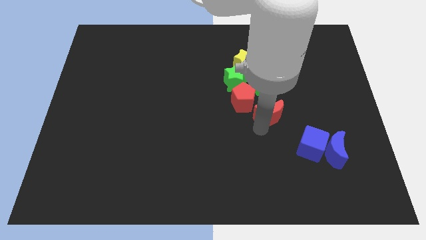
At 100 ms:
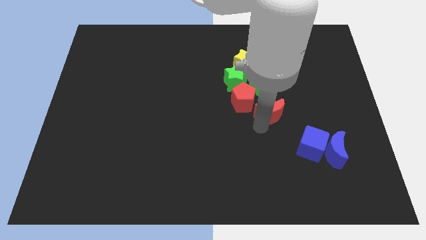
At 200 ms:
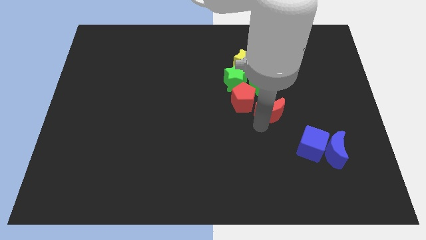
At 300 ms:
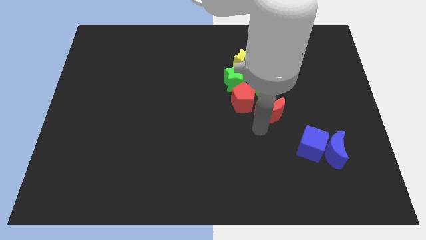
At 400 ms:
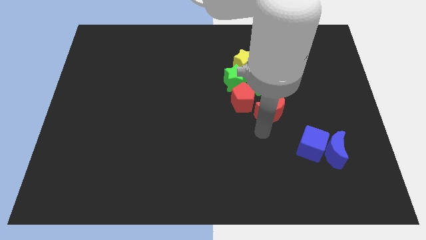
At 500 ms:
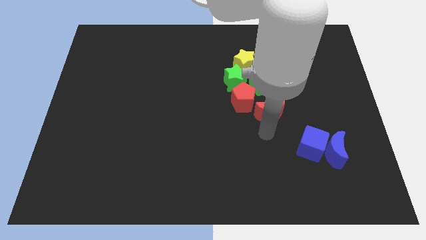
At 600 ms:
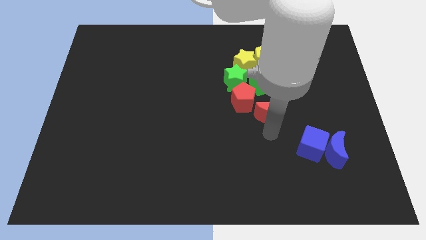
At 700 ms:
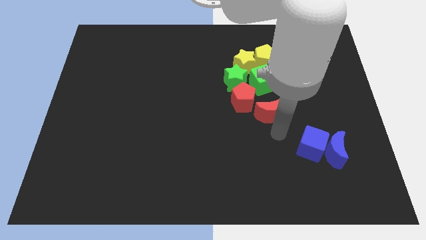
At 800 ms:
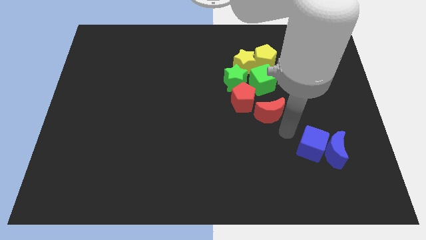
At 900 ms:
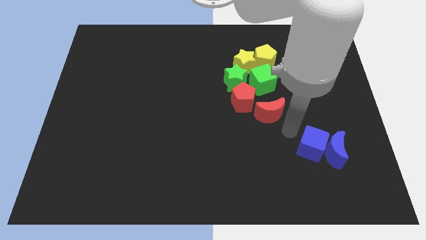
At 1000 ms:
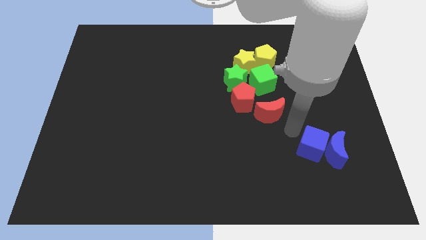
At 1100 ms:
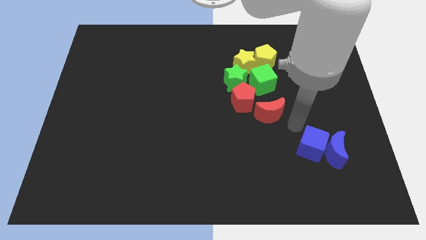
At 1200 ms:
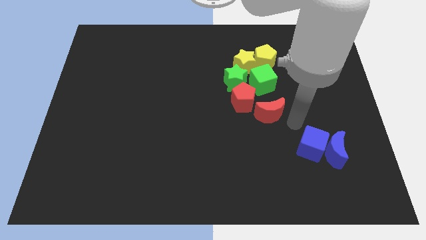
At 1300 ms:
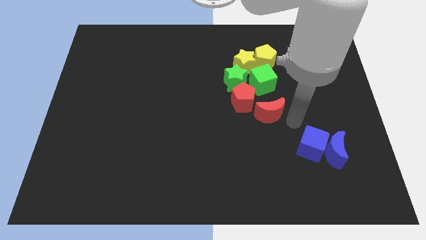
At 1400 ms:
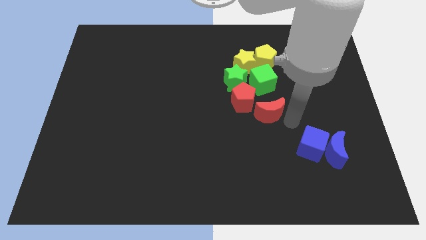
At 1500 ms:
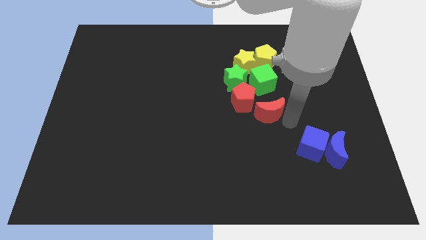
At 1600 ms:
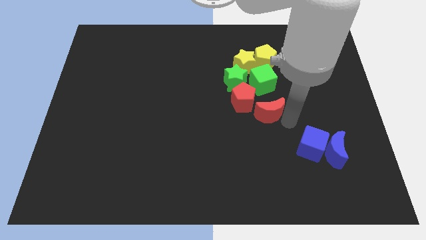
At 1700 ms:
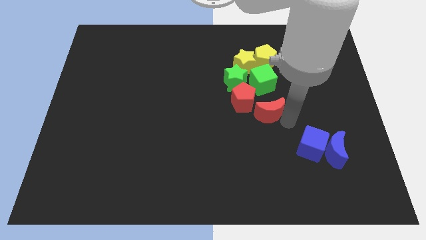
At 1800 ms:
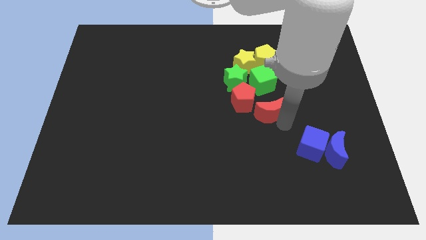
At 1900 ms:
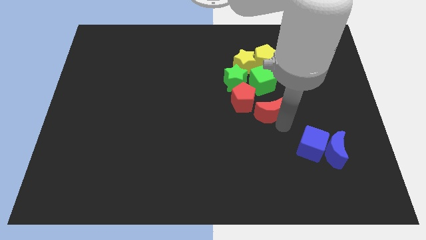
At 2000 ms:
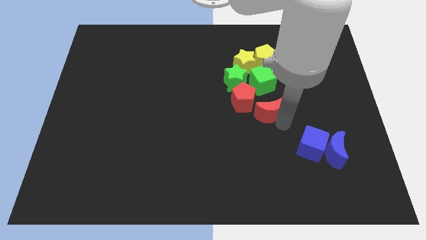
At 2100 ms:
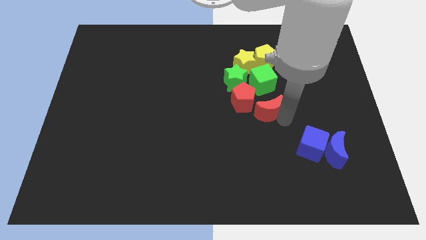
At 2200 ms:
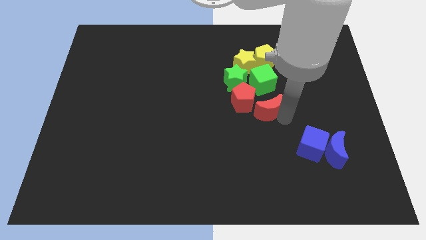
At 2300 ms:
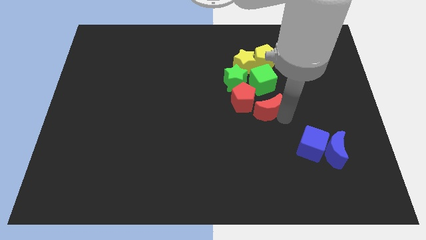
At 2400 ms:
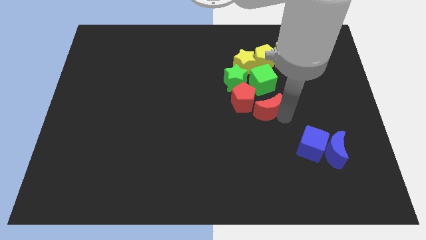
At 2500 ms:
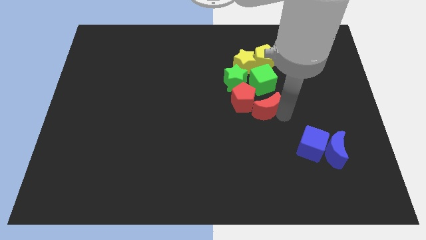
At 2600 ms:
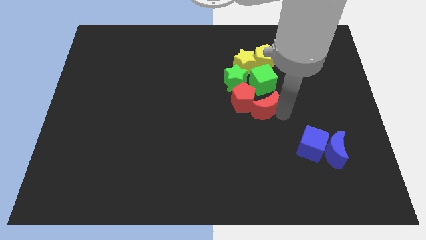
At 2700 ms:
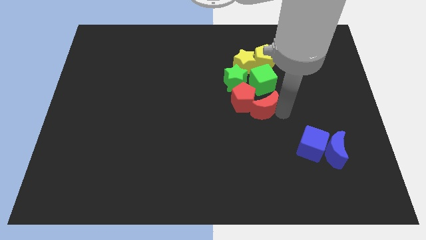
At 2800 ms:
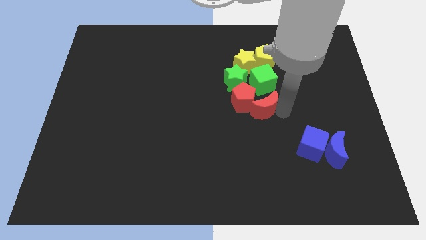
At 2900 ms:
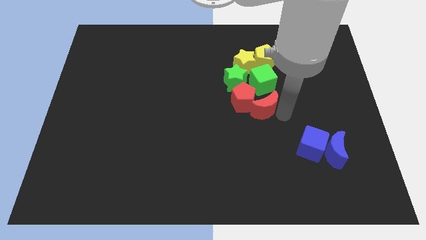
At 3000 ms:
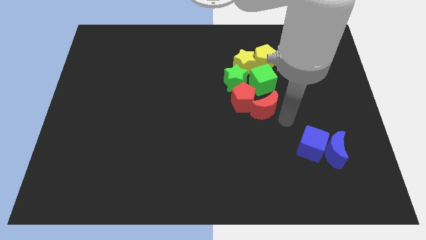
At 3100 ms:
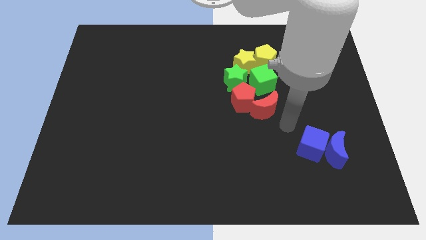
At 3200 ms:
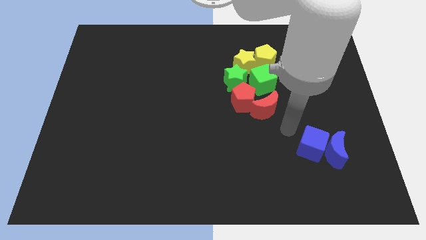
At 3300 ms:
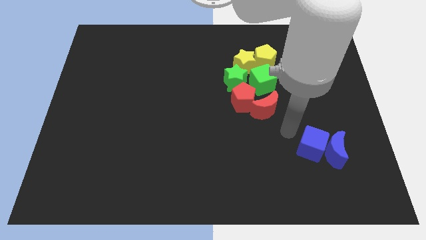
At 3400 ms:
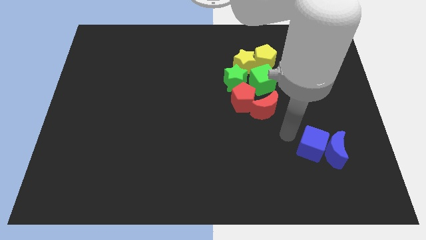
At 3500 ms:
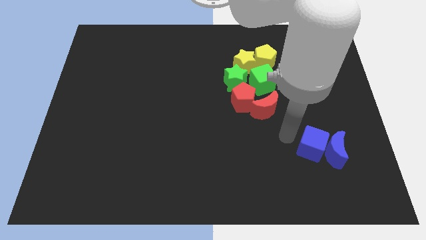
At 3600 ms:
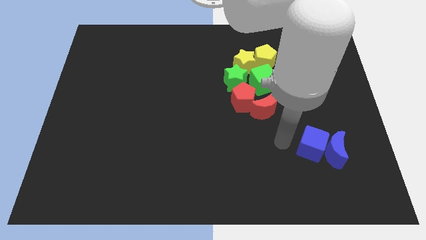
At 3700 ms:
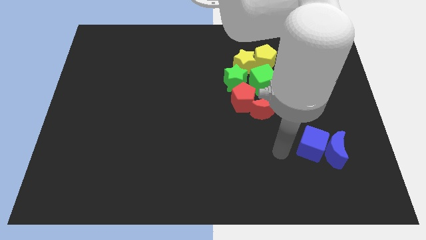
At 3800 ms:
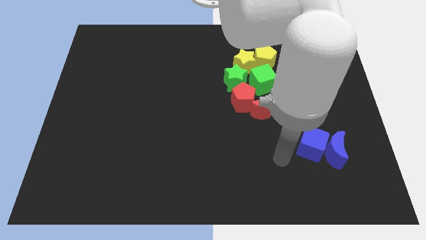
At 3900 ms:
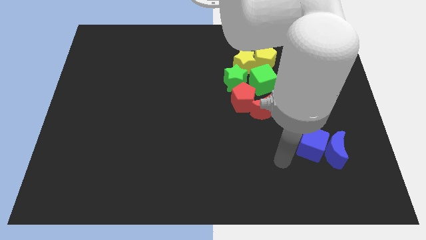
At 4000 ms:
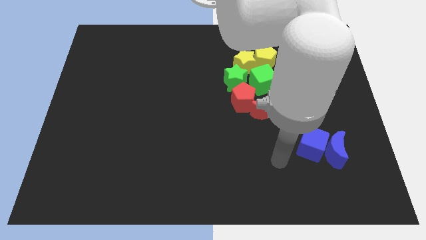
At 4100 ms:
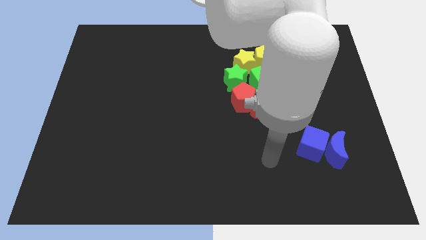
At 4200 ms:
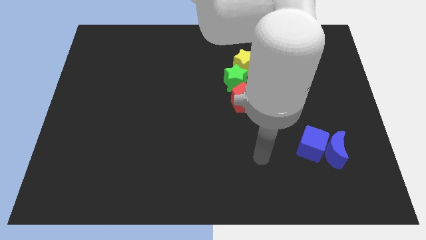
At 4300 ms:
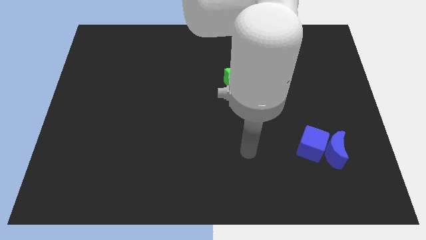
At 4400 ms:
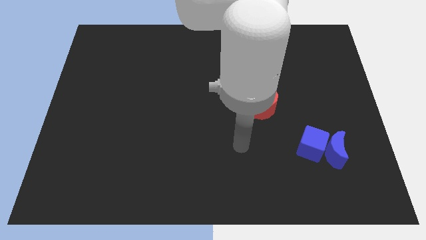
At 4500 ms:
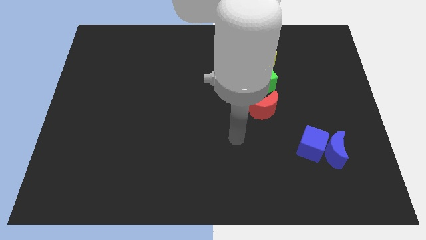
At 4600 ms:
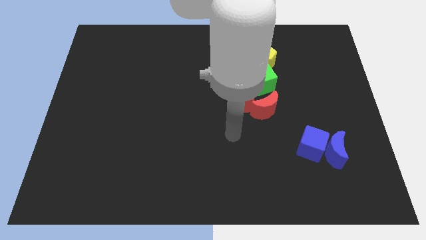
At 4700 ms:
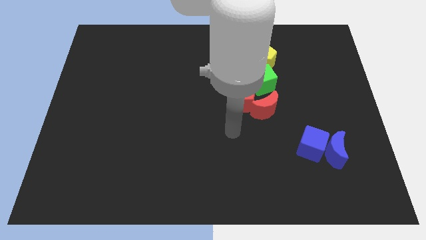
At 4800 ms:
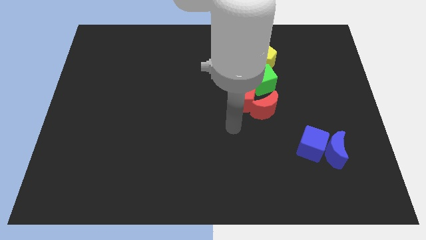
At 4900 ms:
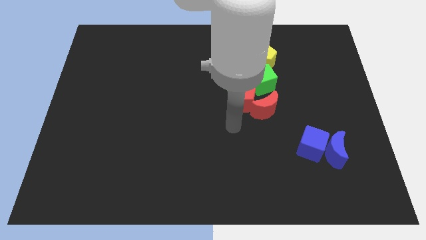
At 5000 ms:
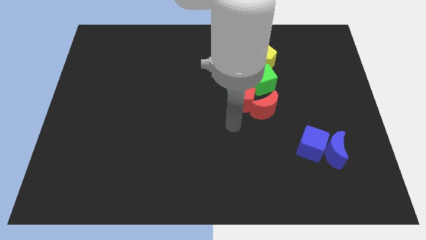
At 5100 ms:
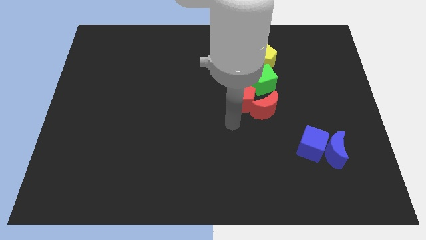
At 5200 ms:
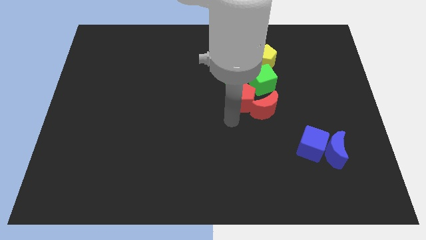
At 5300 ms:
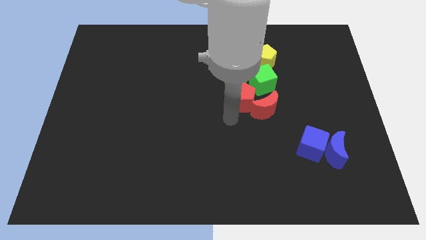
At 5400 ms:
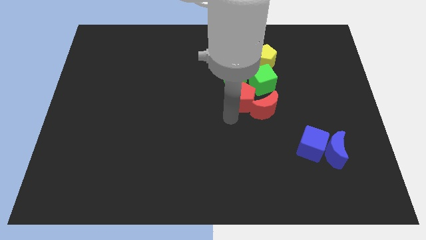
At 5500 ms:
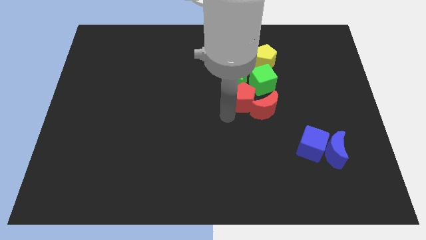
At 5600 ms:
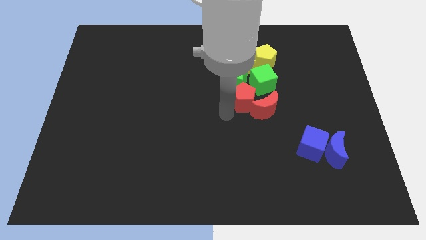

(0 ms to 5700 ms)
place red crescent right bottom of the red pentagon

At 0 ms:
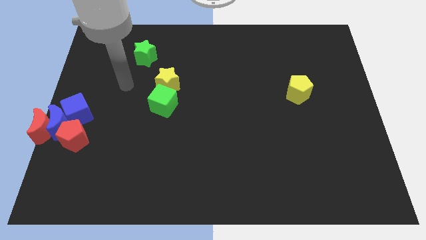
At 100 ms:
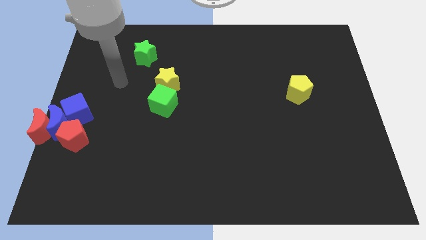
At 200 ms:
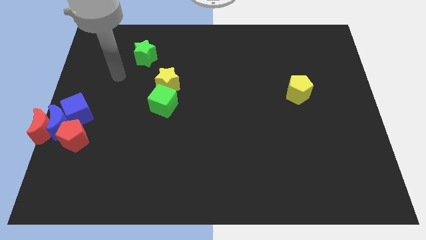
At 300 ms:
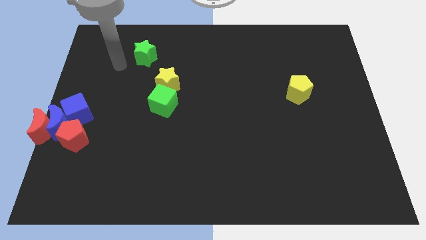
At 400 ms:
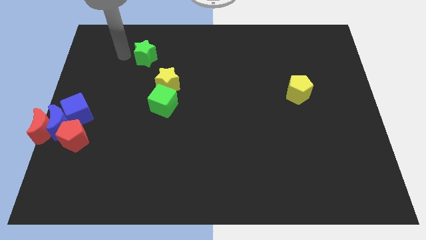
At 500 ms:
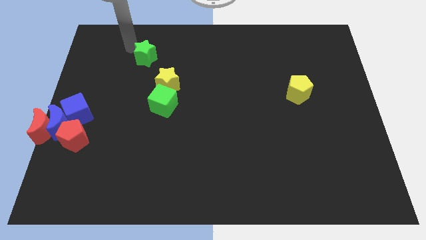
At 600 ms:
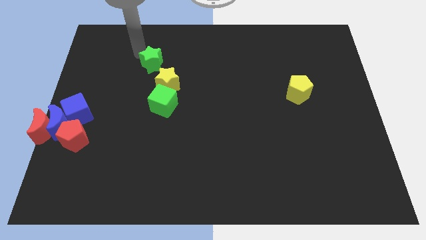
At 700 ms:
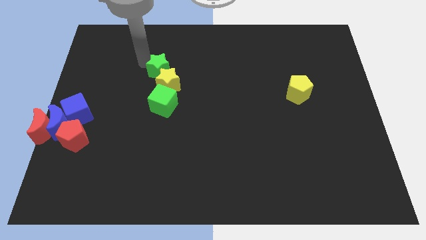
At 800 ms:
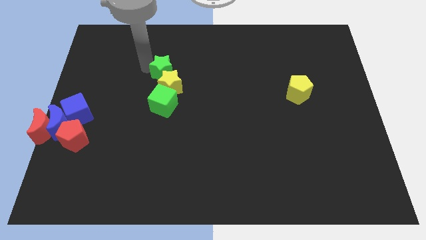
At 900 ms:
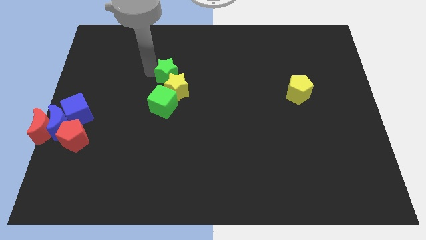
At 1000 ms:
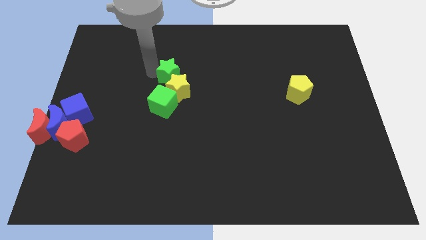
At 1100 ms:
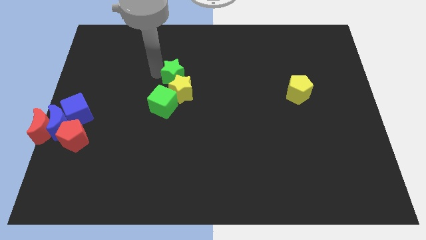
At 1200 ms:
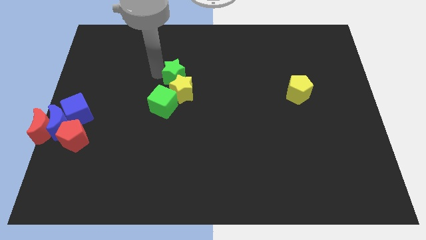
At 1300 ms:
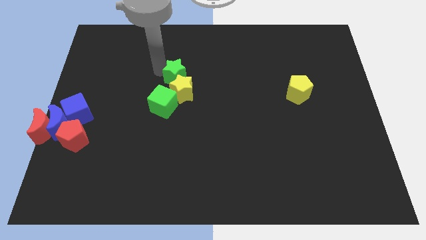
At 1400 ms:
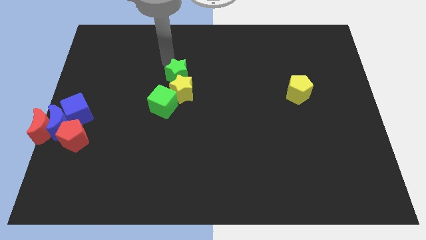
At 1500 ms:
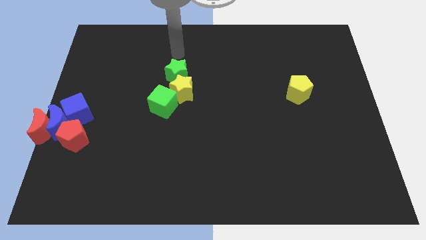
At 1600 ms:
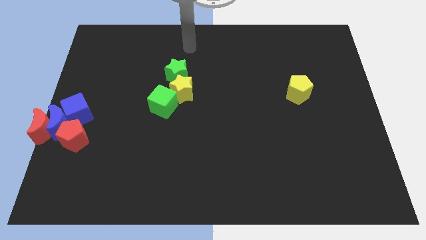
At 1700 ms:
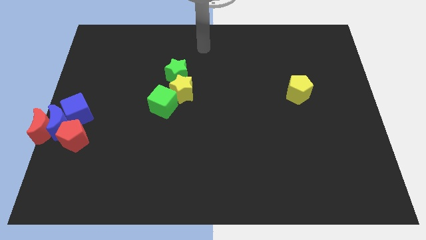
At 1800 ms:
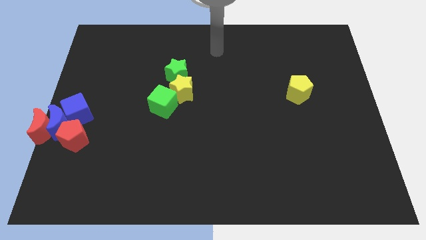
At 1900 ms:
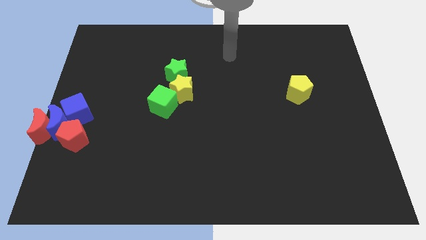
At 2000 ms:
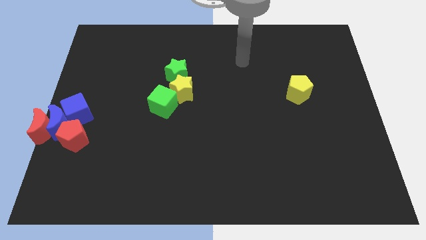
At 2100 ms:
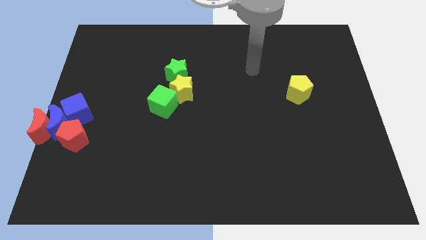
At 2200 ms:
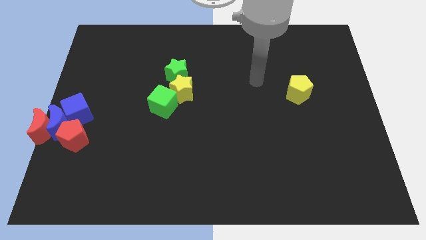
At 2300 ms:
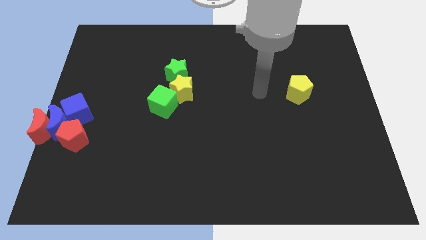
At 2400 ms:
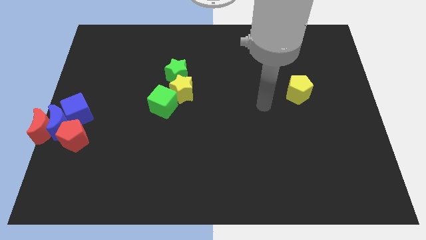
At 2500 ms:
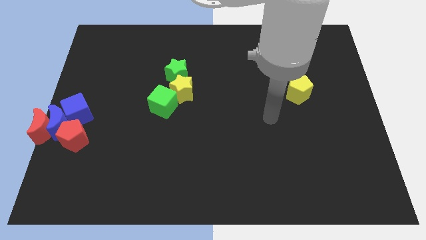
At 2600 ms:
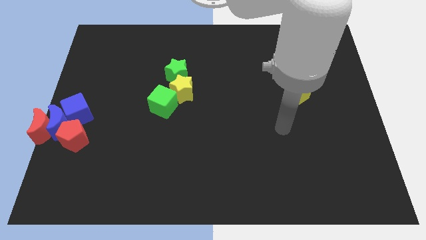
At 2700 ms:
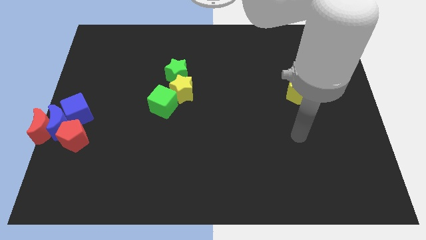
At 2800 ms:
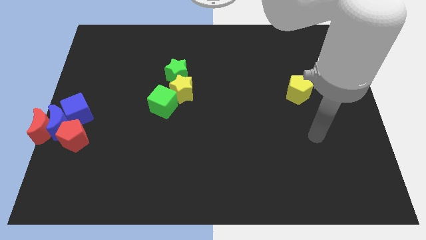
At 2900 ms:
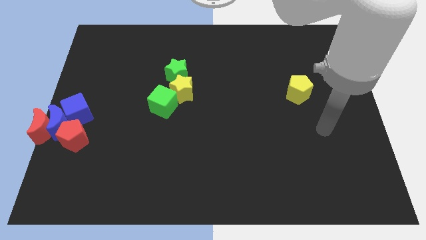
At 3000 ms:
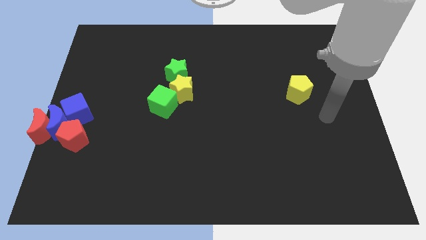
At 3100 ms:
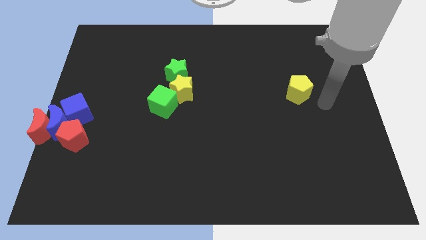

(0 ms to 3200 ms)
push the yellow star with green star slightly to the bottom of the board

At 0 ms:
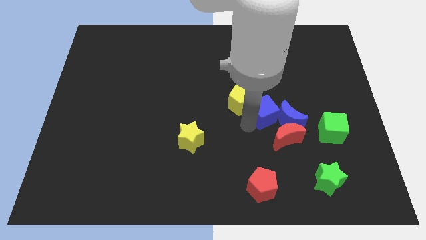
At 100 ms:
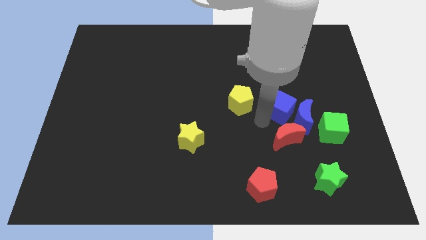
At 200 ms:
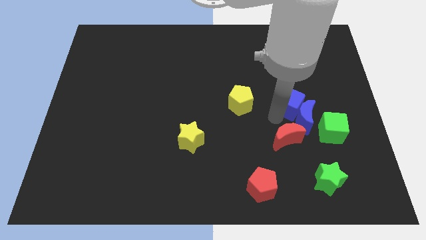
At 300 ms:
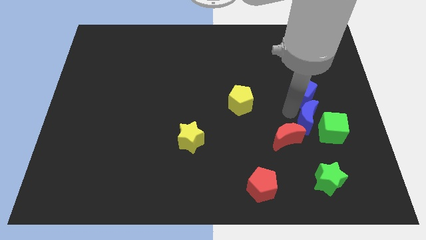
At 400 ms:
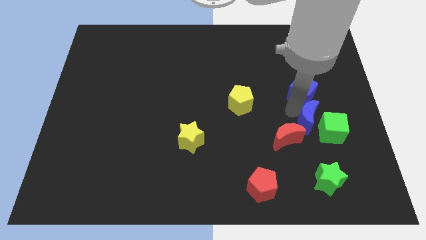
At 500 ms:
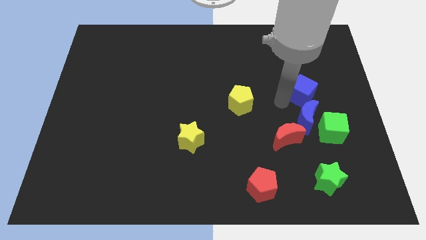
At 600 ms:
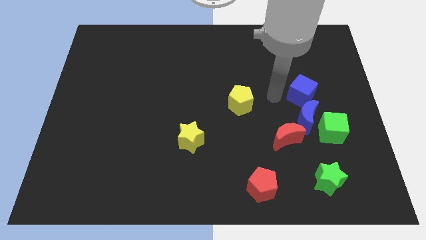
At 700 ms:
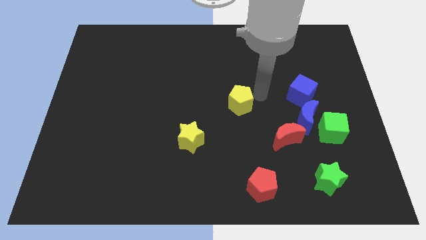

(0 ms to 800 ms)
place the blue cube above the blue crescent
